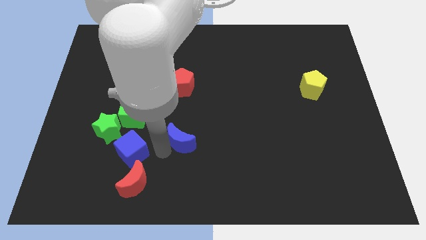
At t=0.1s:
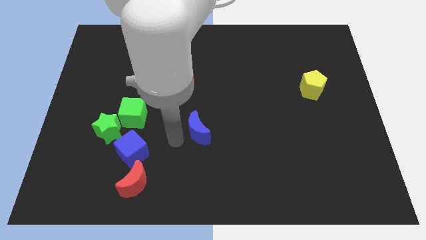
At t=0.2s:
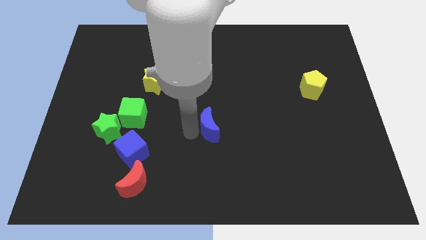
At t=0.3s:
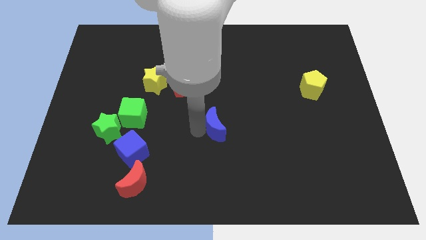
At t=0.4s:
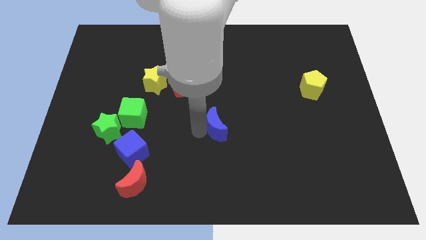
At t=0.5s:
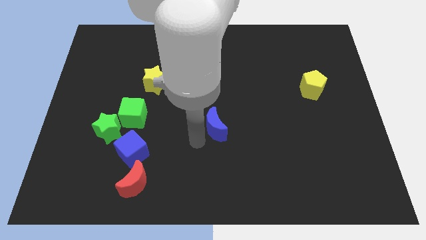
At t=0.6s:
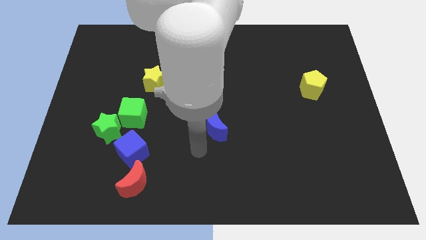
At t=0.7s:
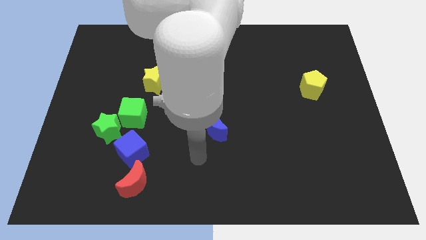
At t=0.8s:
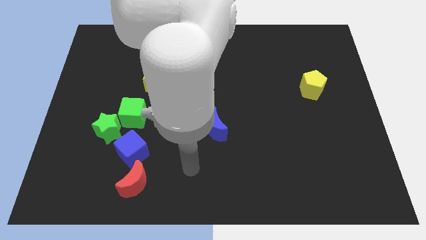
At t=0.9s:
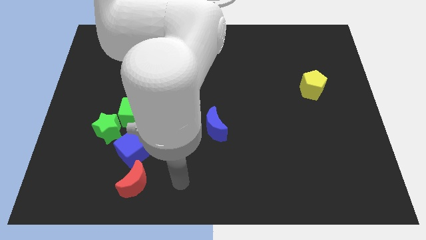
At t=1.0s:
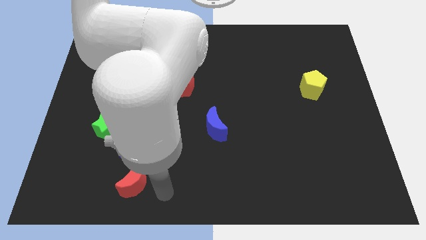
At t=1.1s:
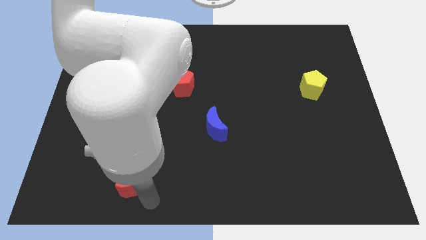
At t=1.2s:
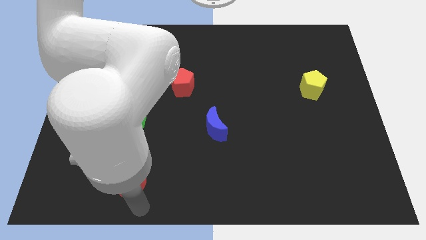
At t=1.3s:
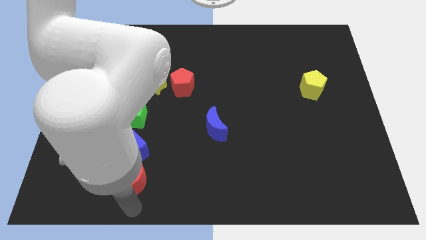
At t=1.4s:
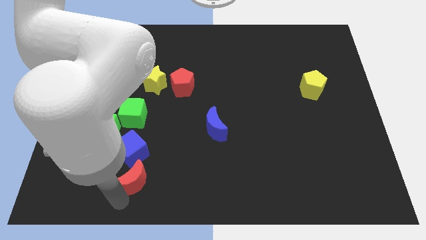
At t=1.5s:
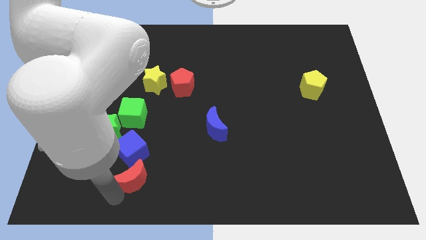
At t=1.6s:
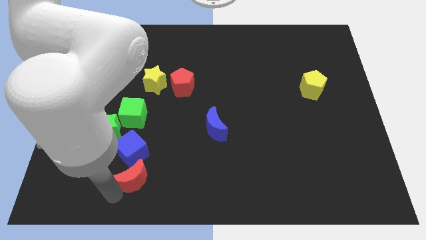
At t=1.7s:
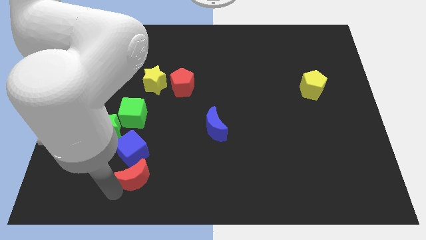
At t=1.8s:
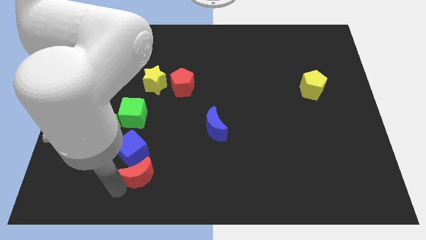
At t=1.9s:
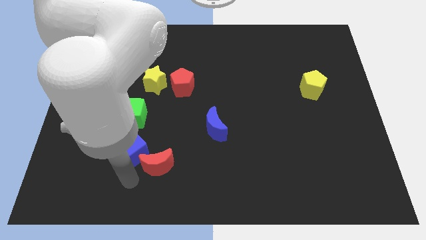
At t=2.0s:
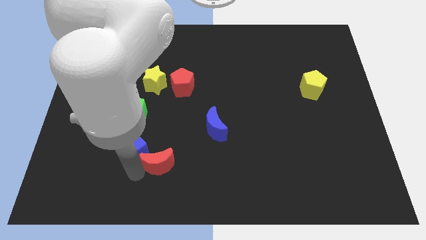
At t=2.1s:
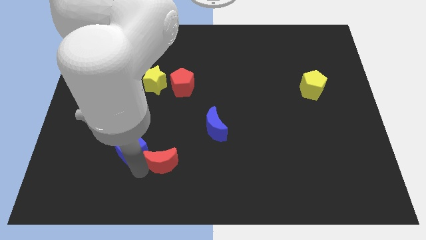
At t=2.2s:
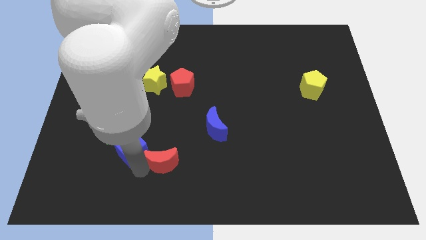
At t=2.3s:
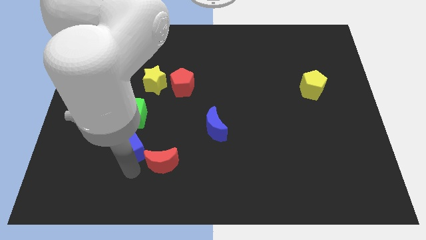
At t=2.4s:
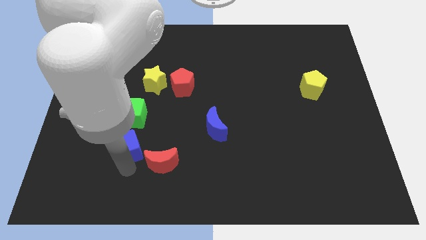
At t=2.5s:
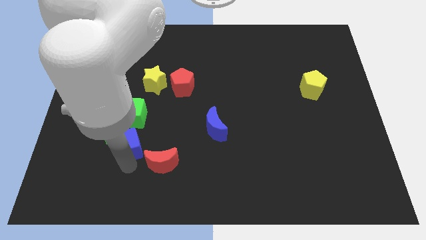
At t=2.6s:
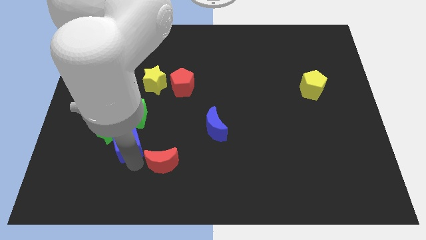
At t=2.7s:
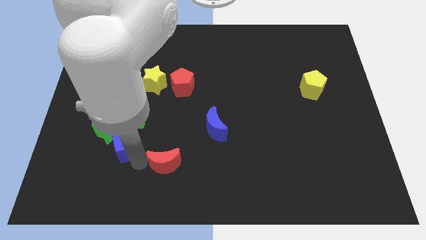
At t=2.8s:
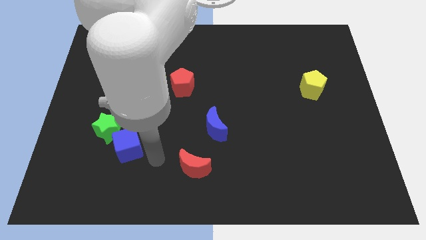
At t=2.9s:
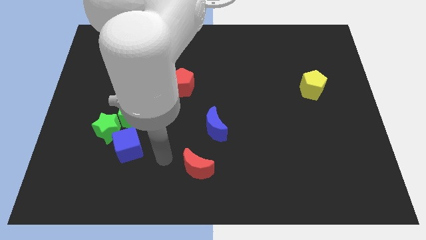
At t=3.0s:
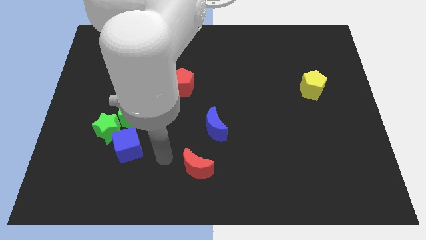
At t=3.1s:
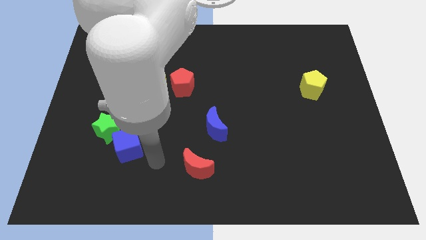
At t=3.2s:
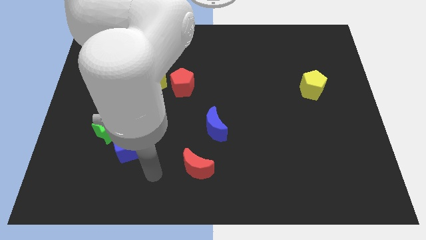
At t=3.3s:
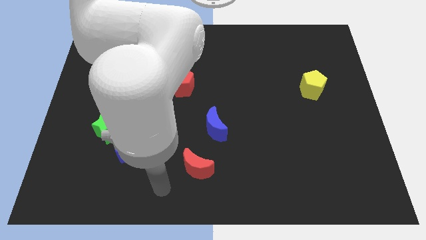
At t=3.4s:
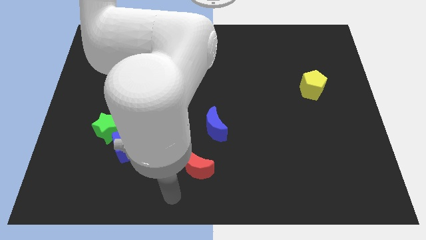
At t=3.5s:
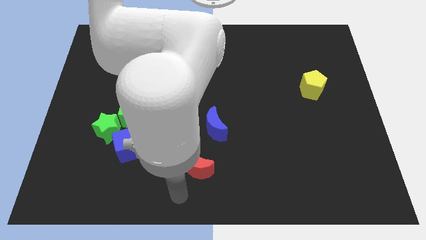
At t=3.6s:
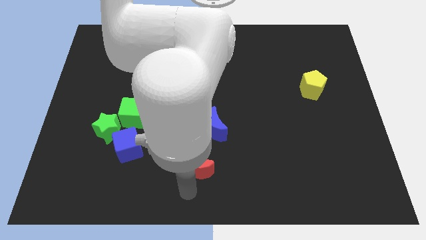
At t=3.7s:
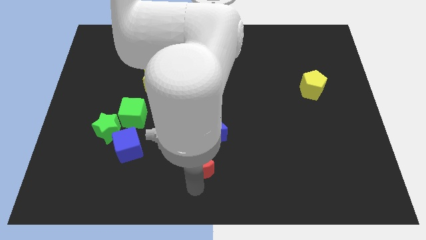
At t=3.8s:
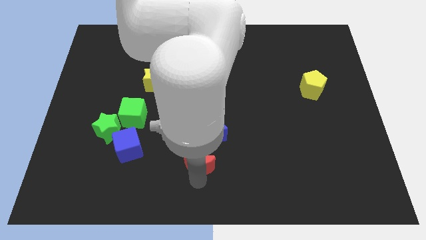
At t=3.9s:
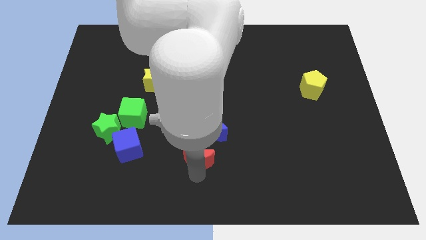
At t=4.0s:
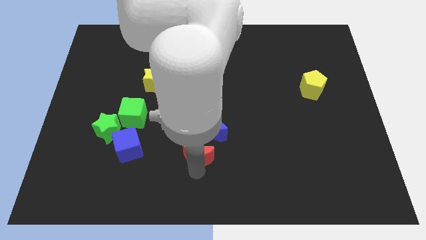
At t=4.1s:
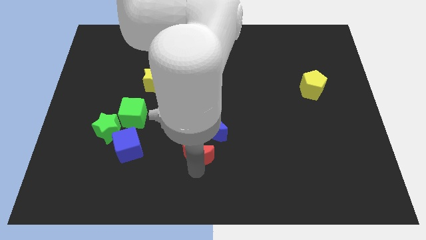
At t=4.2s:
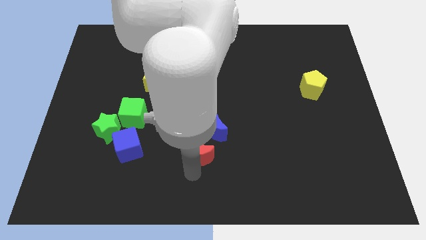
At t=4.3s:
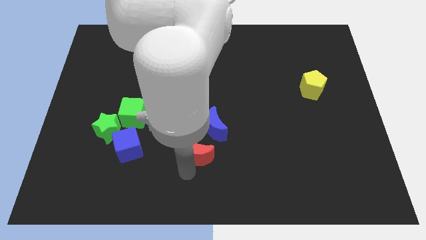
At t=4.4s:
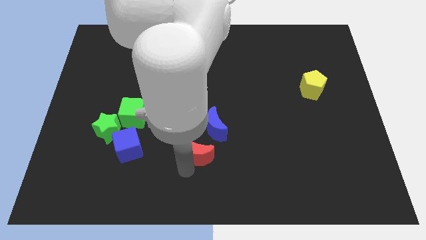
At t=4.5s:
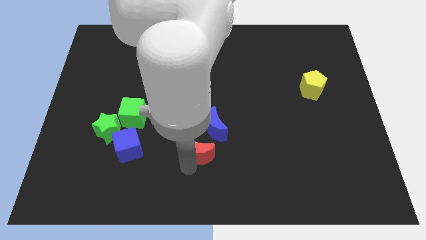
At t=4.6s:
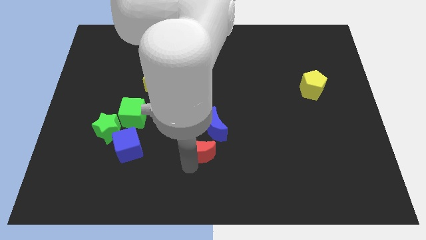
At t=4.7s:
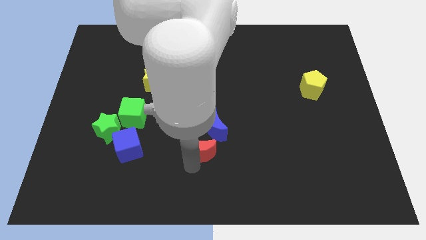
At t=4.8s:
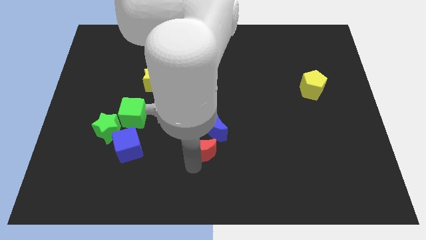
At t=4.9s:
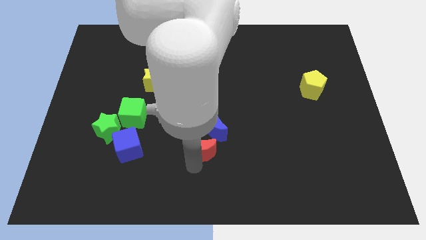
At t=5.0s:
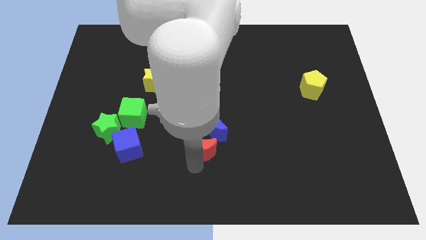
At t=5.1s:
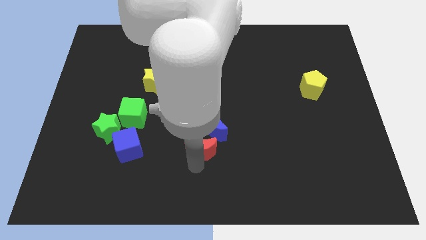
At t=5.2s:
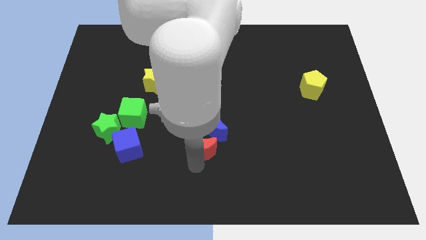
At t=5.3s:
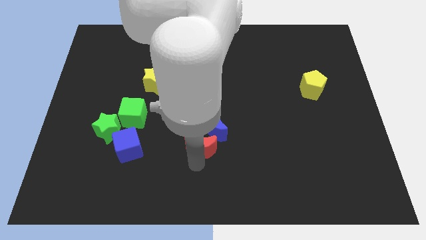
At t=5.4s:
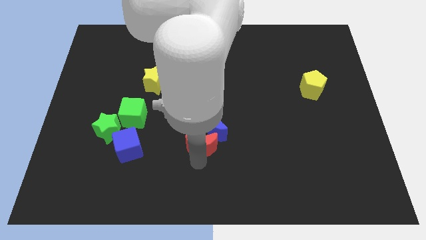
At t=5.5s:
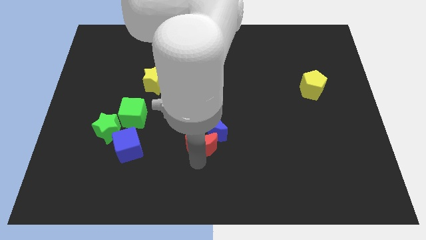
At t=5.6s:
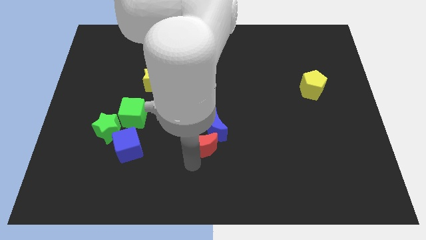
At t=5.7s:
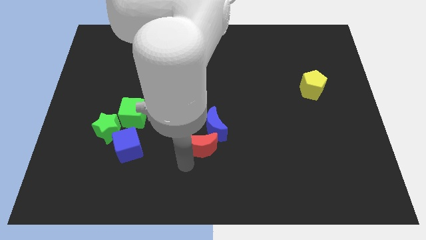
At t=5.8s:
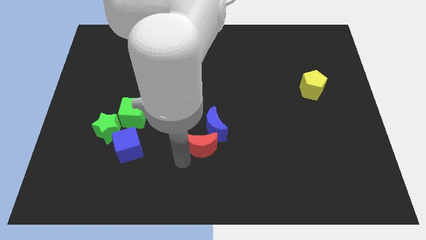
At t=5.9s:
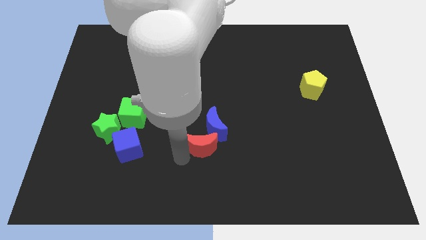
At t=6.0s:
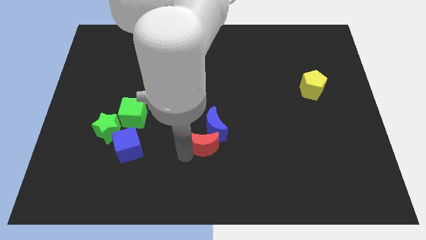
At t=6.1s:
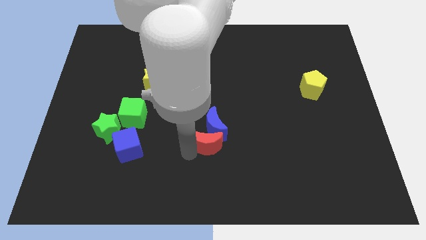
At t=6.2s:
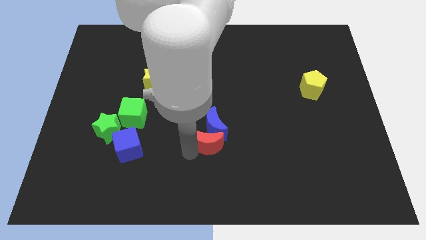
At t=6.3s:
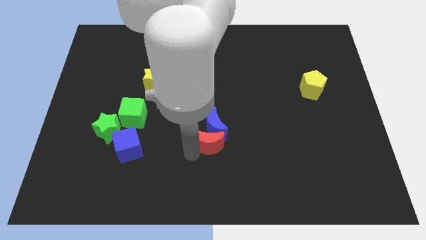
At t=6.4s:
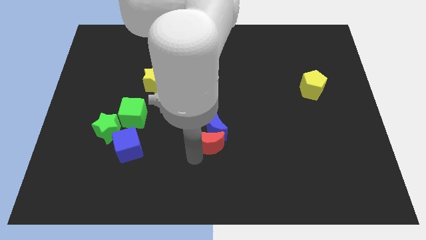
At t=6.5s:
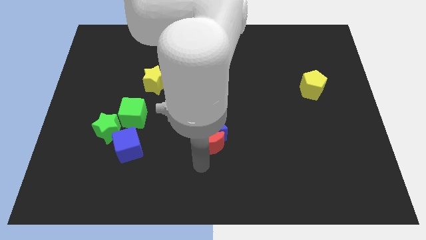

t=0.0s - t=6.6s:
place the red and blue moon together at the right side of the blue cube

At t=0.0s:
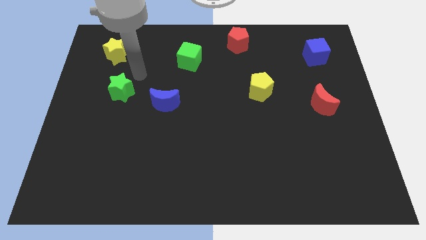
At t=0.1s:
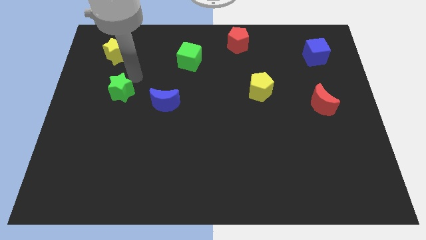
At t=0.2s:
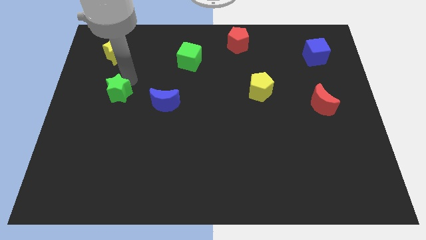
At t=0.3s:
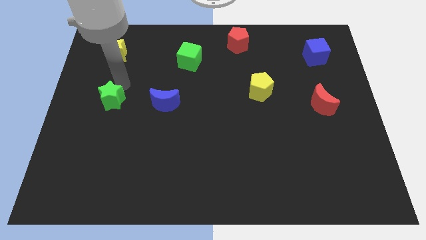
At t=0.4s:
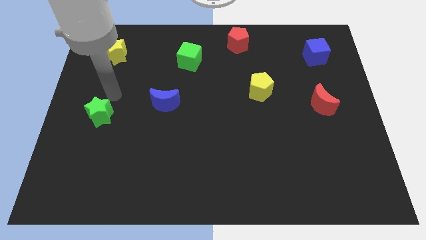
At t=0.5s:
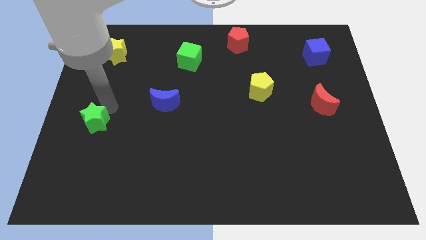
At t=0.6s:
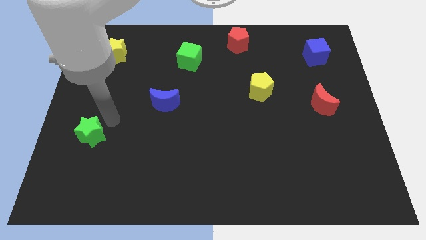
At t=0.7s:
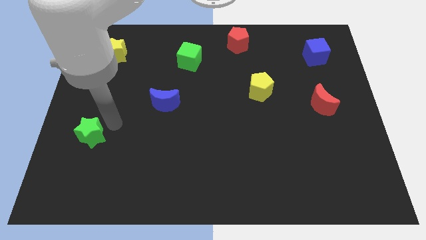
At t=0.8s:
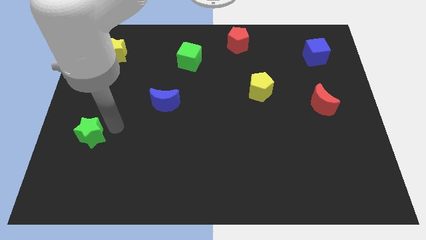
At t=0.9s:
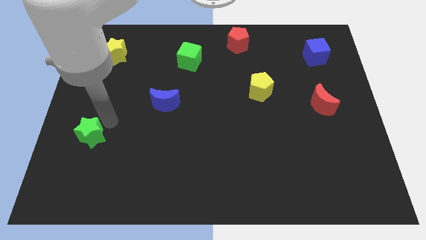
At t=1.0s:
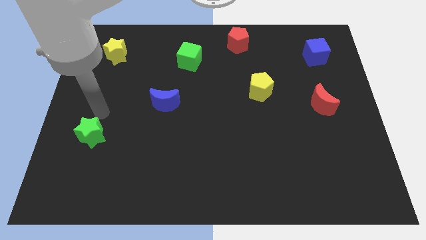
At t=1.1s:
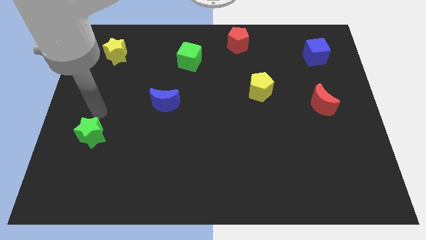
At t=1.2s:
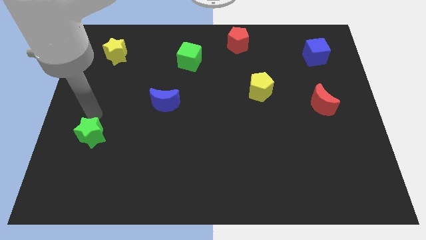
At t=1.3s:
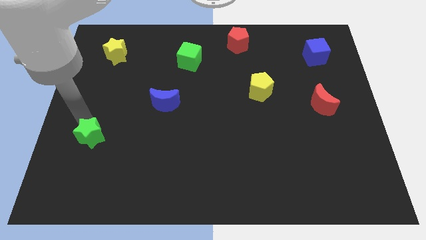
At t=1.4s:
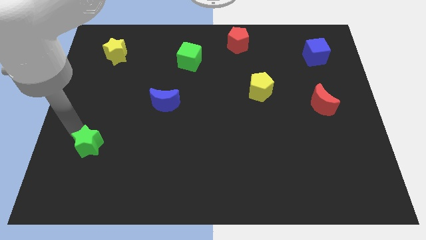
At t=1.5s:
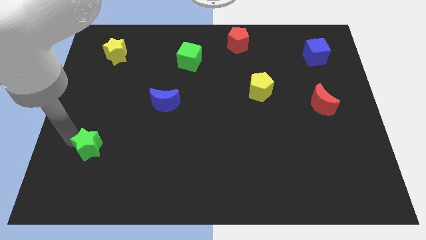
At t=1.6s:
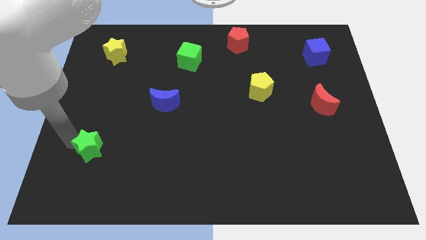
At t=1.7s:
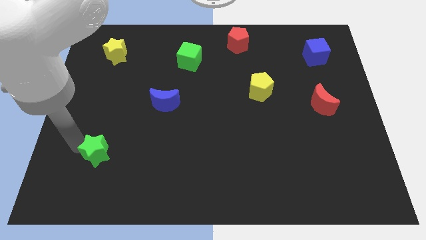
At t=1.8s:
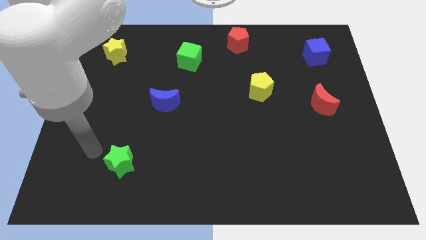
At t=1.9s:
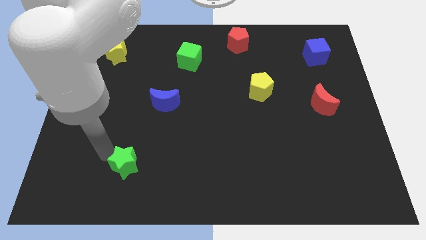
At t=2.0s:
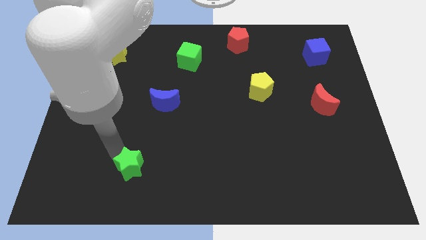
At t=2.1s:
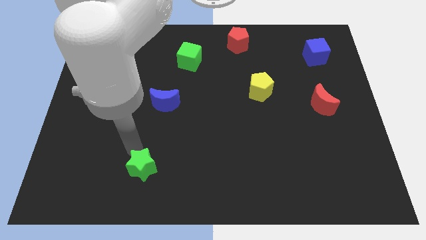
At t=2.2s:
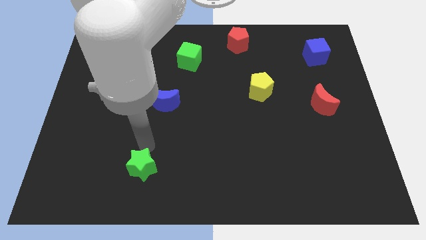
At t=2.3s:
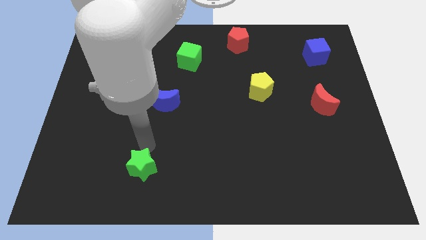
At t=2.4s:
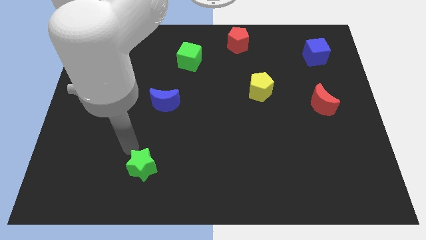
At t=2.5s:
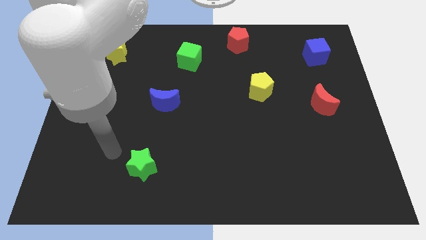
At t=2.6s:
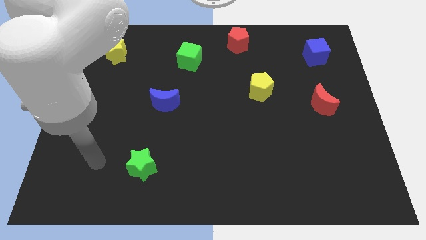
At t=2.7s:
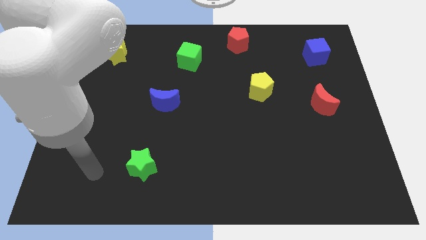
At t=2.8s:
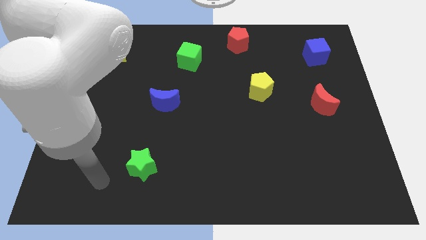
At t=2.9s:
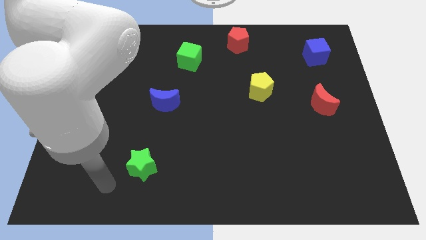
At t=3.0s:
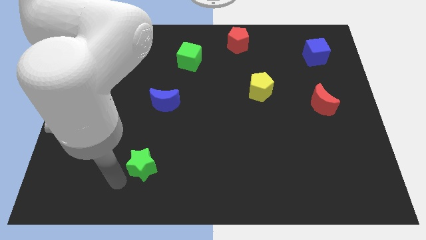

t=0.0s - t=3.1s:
put the green star diagonal to the yellow pentagon
